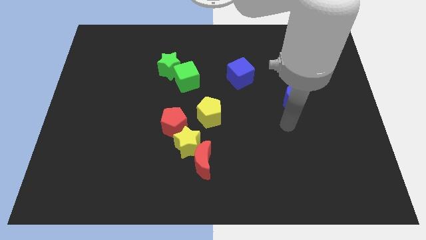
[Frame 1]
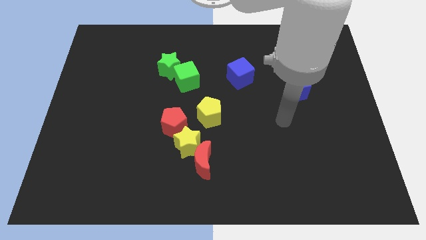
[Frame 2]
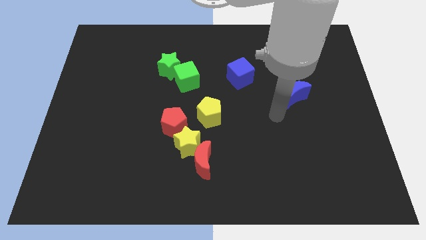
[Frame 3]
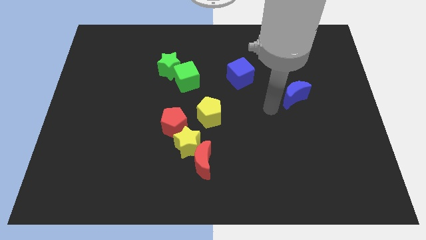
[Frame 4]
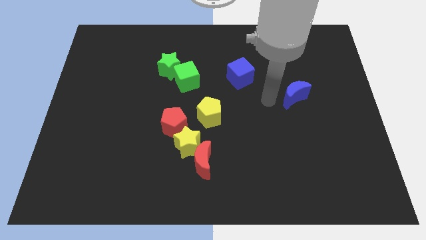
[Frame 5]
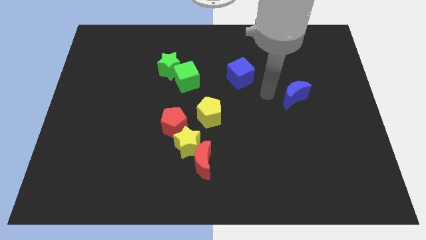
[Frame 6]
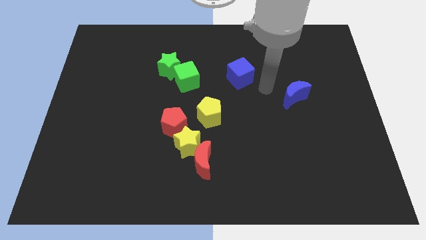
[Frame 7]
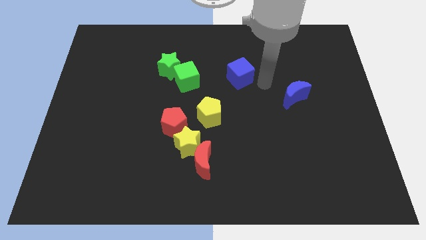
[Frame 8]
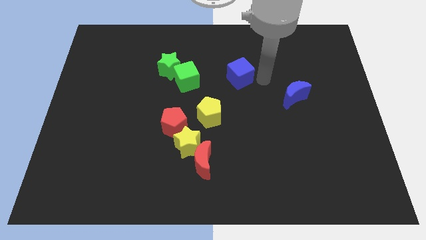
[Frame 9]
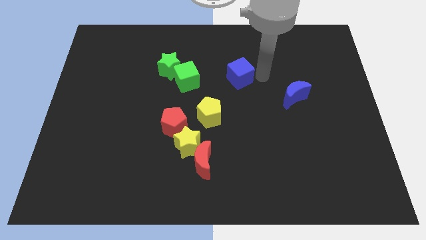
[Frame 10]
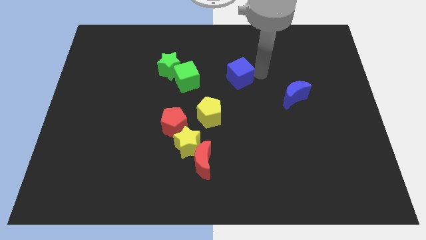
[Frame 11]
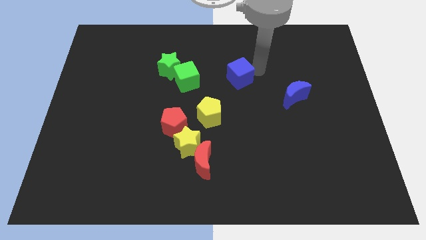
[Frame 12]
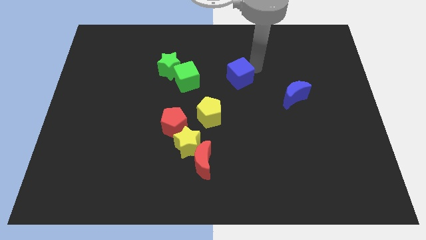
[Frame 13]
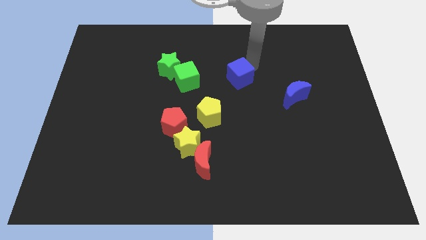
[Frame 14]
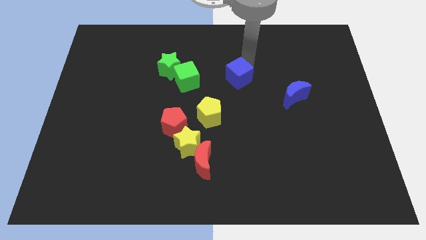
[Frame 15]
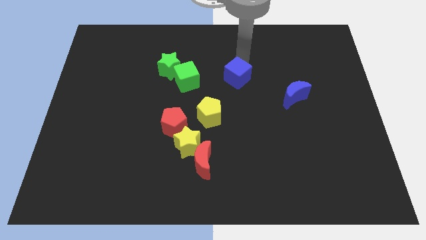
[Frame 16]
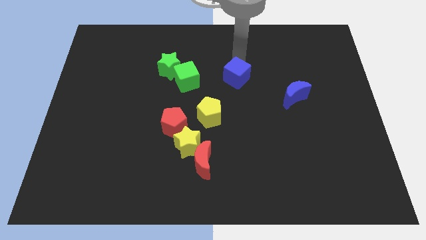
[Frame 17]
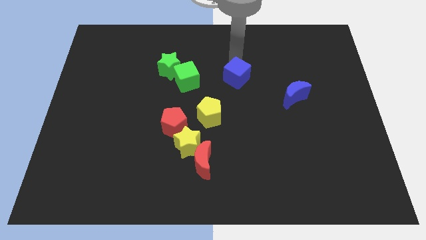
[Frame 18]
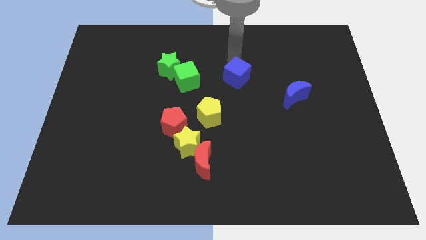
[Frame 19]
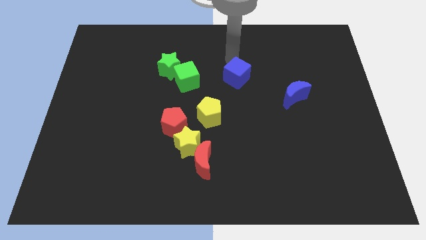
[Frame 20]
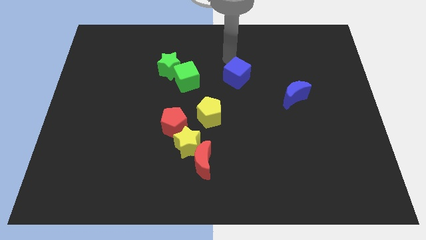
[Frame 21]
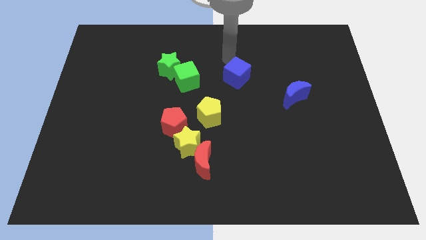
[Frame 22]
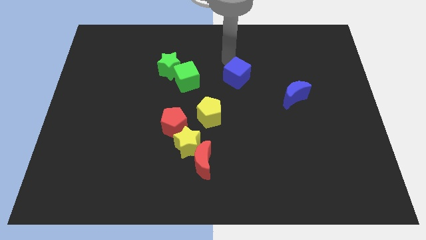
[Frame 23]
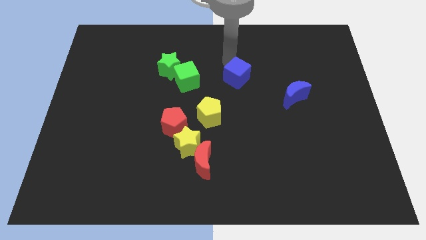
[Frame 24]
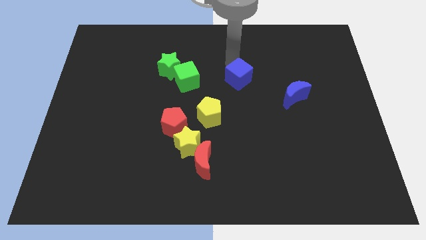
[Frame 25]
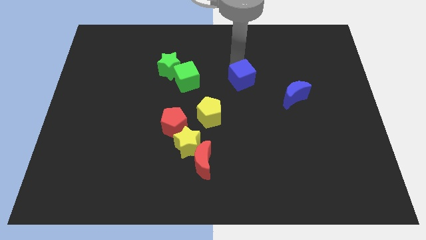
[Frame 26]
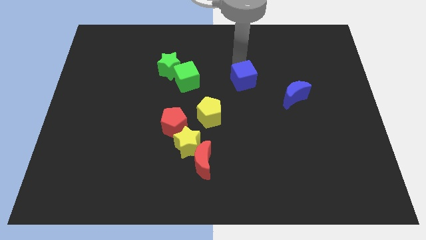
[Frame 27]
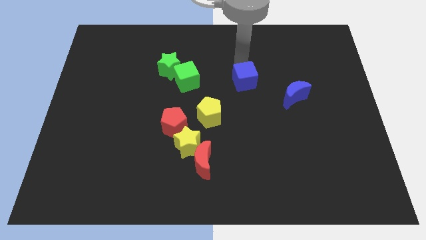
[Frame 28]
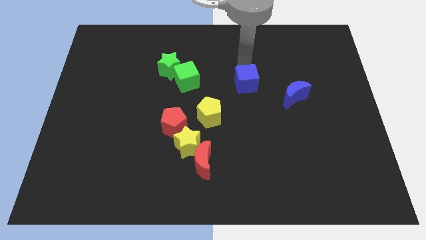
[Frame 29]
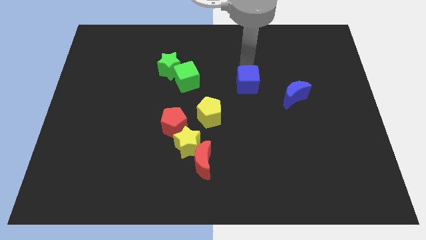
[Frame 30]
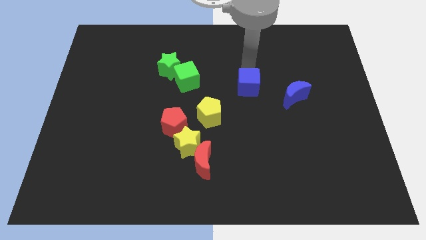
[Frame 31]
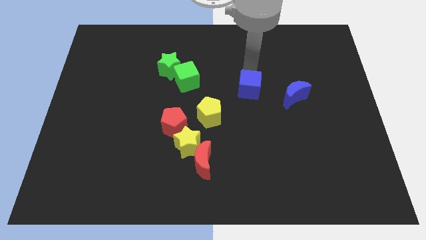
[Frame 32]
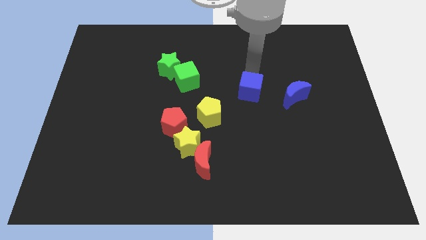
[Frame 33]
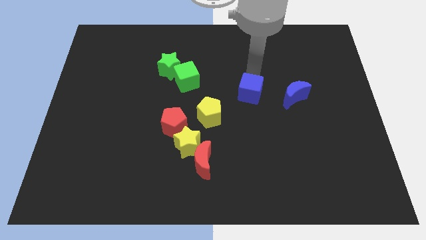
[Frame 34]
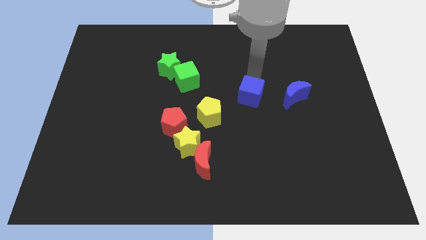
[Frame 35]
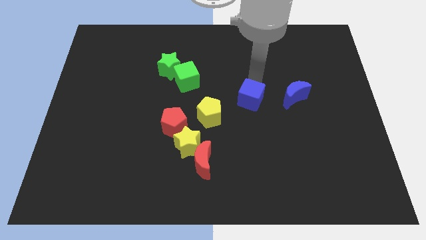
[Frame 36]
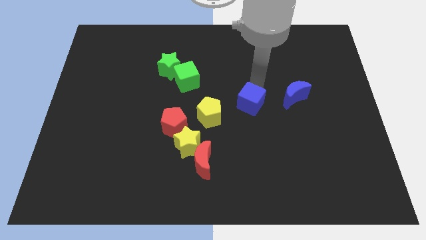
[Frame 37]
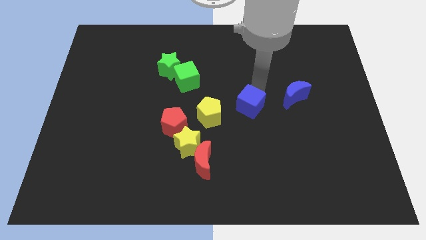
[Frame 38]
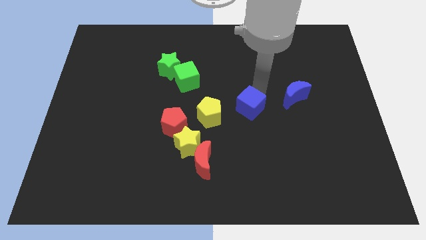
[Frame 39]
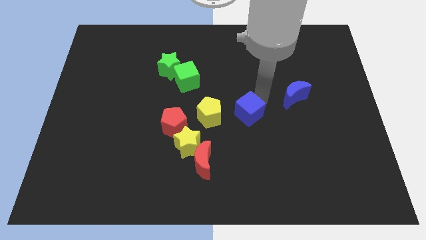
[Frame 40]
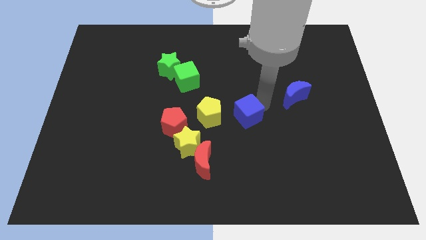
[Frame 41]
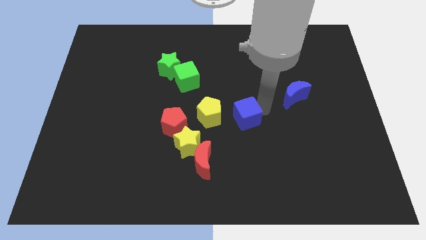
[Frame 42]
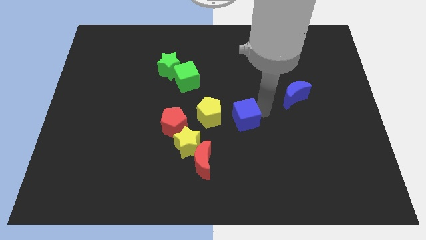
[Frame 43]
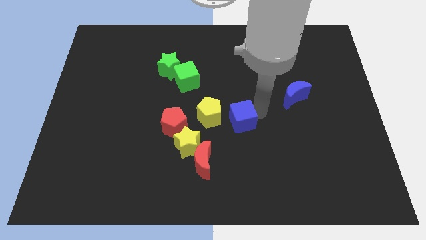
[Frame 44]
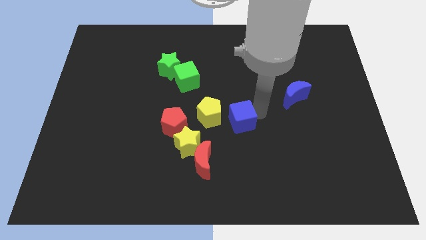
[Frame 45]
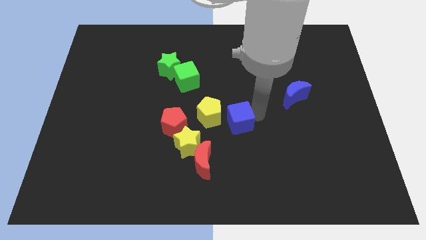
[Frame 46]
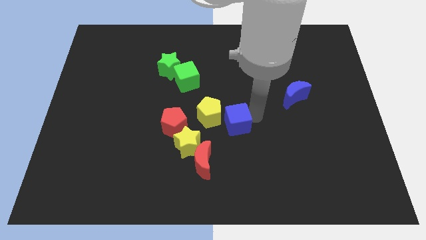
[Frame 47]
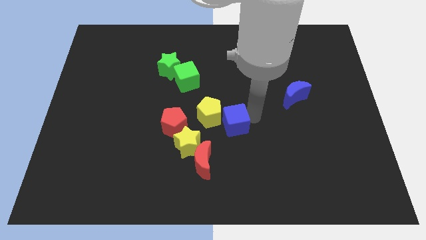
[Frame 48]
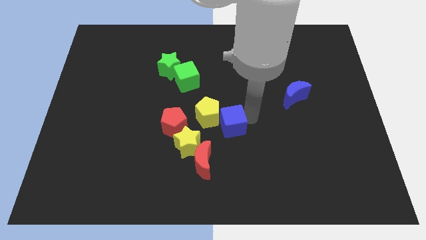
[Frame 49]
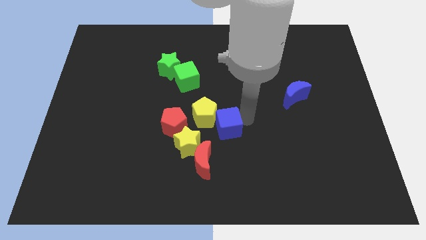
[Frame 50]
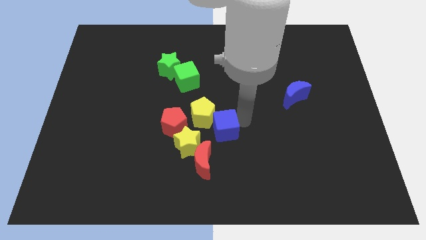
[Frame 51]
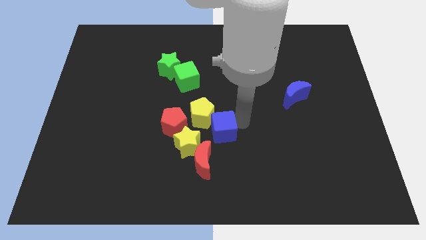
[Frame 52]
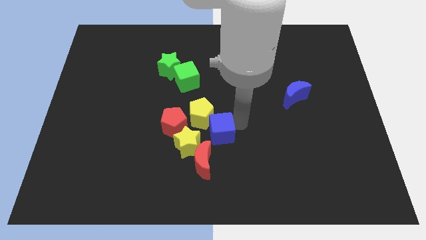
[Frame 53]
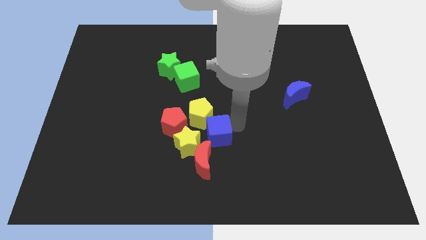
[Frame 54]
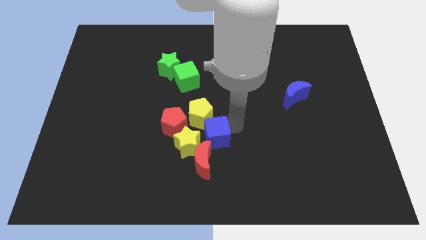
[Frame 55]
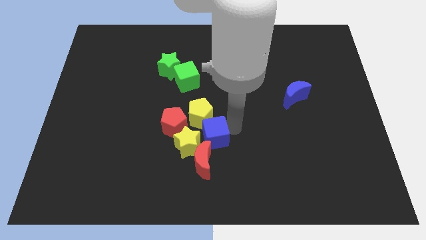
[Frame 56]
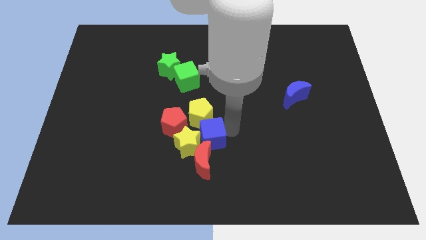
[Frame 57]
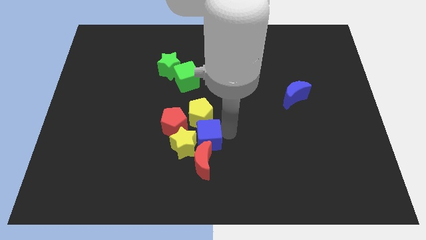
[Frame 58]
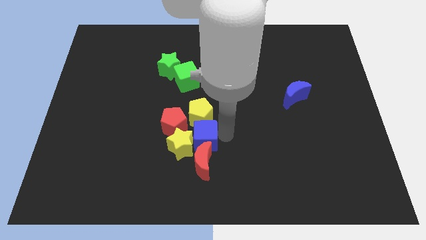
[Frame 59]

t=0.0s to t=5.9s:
put the blue cube next to the yellow star

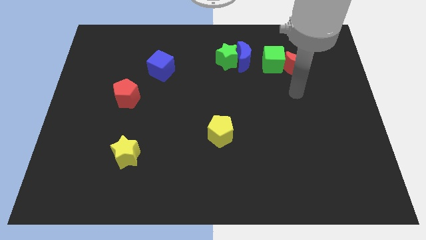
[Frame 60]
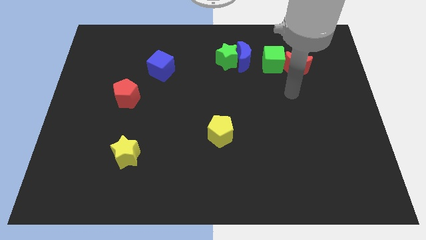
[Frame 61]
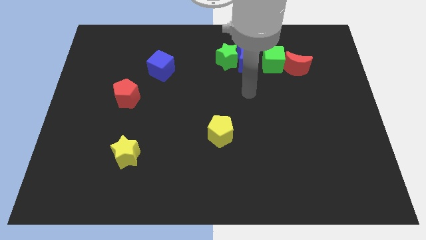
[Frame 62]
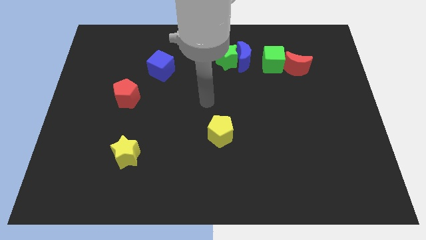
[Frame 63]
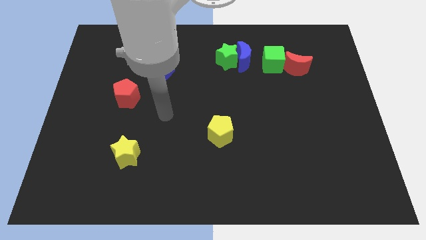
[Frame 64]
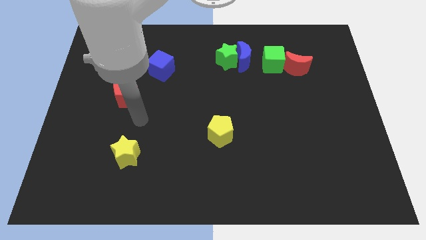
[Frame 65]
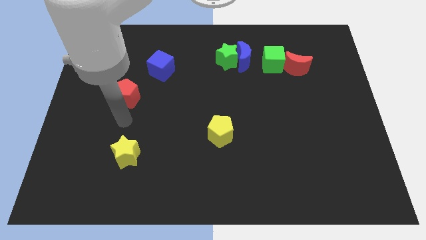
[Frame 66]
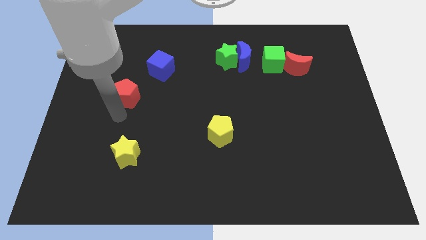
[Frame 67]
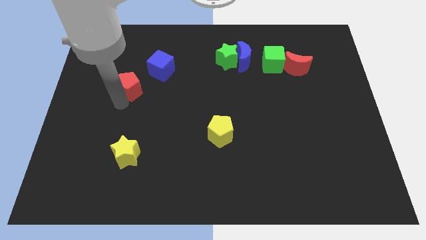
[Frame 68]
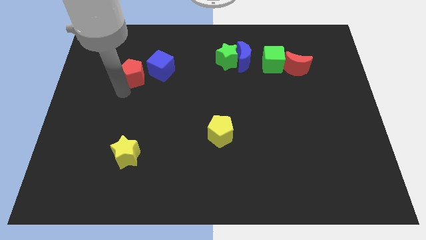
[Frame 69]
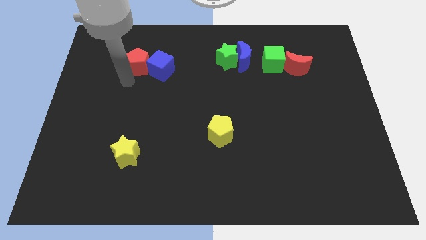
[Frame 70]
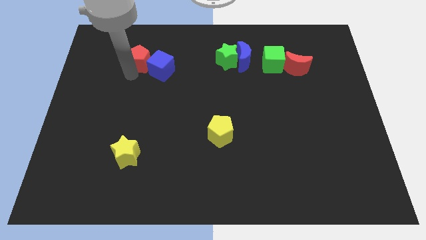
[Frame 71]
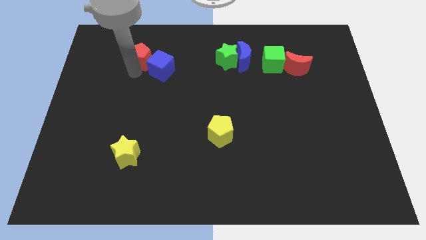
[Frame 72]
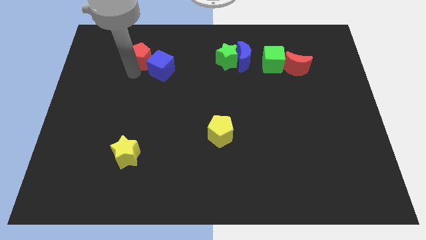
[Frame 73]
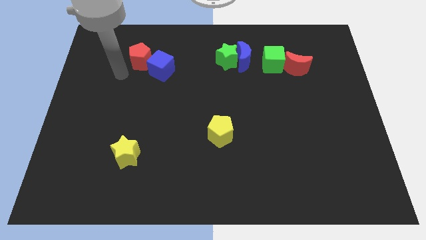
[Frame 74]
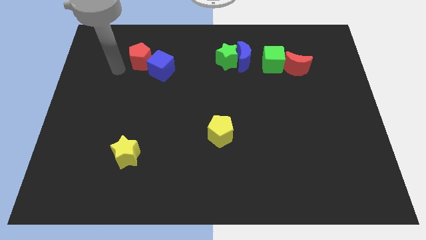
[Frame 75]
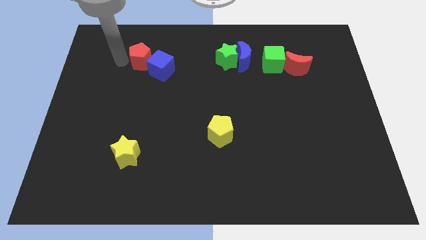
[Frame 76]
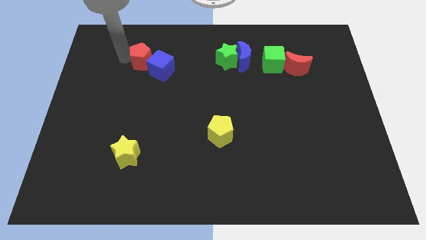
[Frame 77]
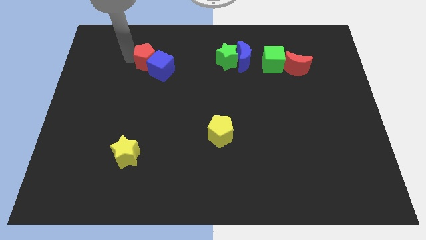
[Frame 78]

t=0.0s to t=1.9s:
move the red pentagon to the blue cube

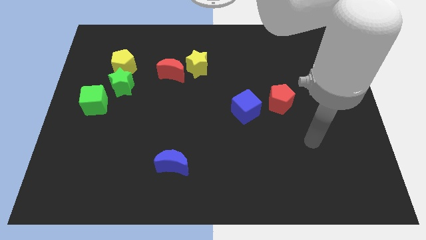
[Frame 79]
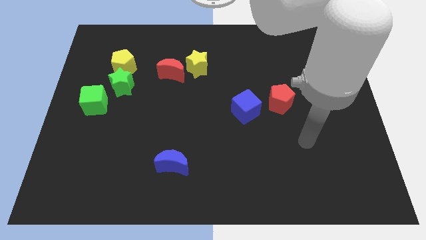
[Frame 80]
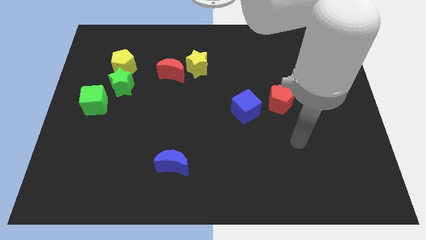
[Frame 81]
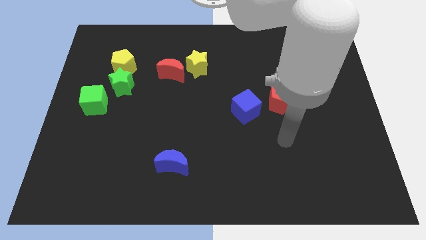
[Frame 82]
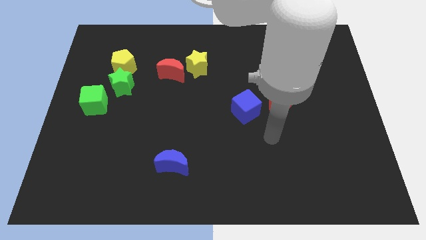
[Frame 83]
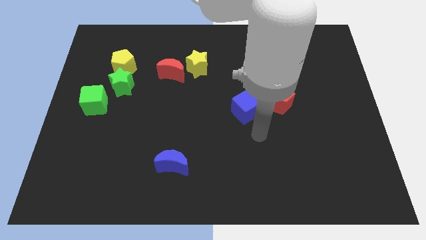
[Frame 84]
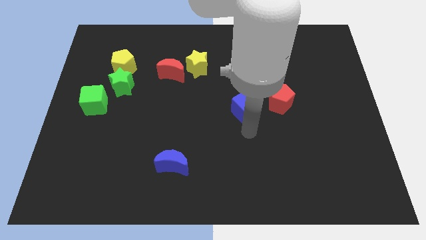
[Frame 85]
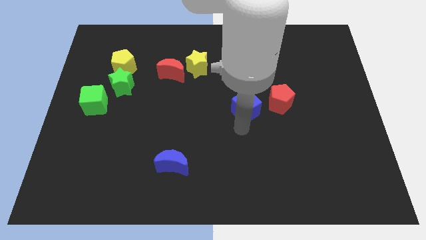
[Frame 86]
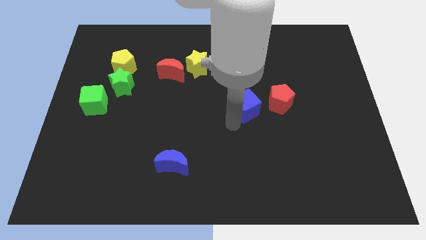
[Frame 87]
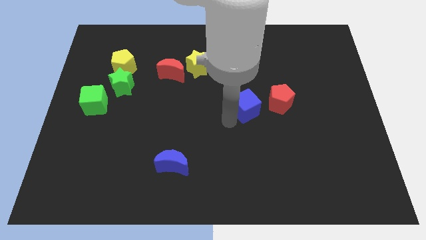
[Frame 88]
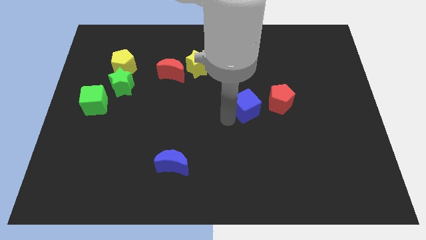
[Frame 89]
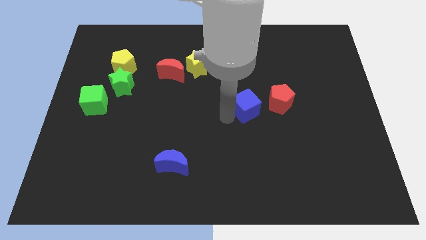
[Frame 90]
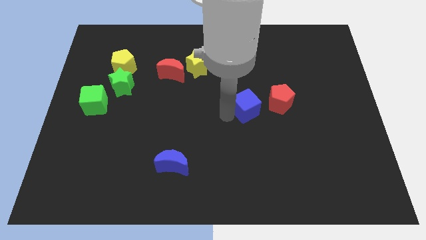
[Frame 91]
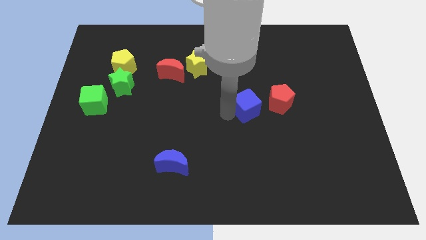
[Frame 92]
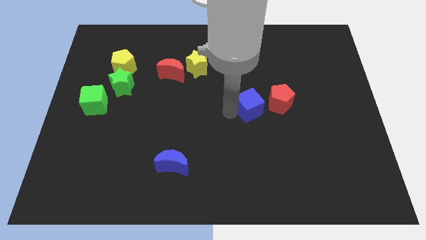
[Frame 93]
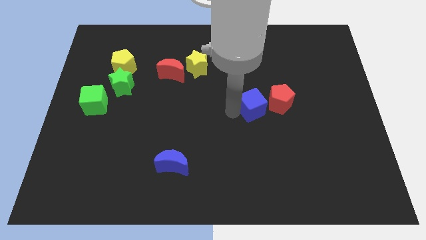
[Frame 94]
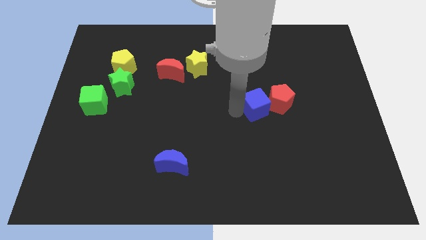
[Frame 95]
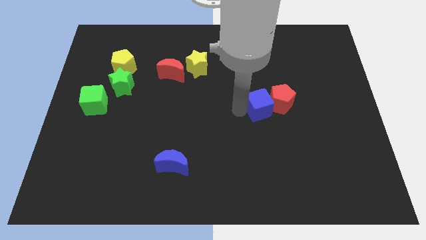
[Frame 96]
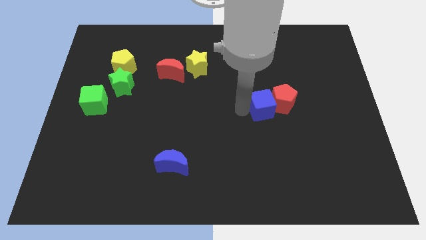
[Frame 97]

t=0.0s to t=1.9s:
slide the blue cube towards the red pentagon
